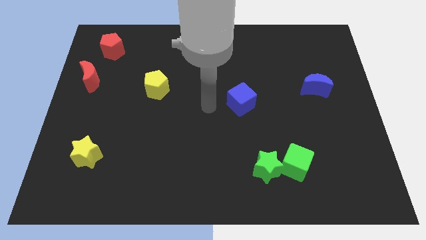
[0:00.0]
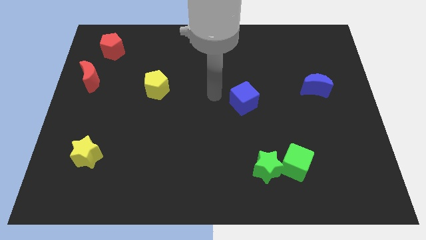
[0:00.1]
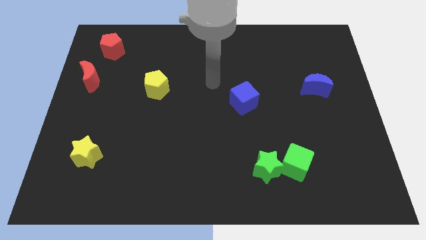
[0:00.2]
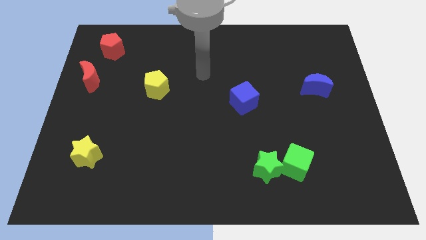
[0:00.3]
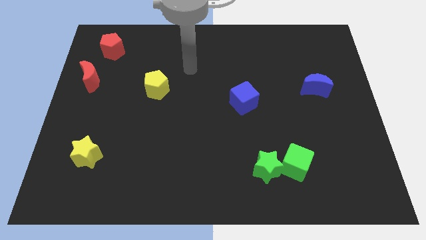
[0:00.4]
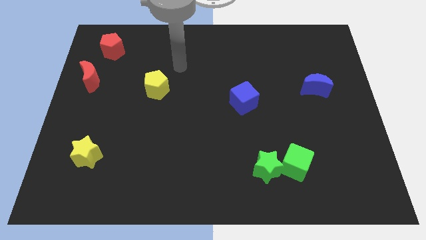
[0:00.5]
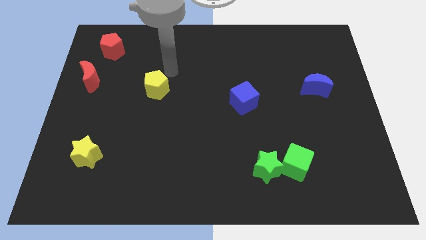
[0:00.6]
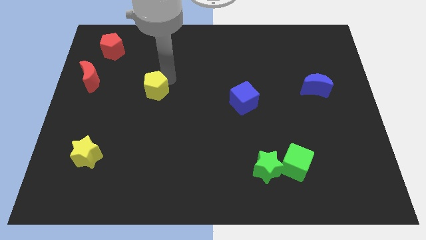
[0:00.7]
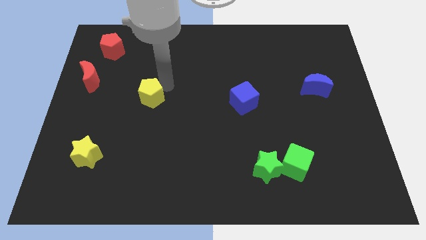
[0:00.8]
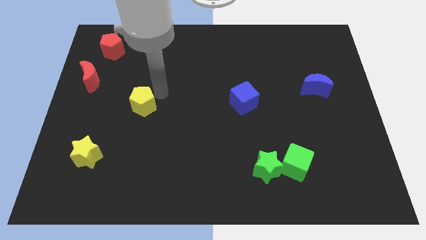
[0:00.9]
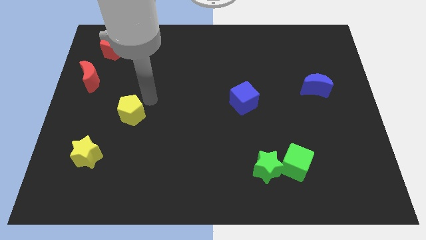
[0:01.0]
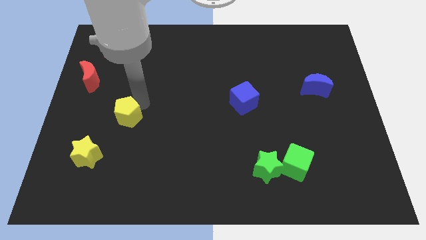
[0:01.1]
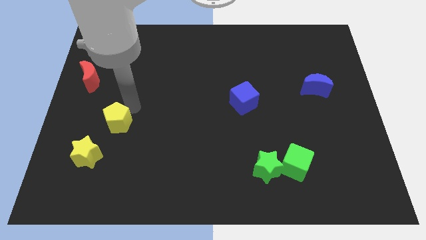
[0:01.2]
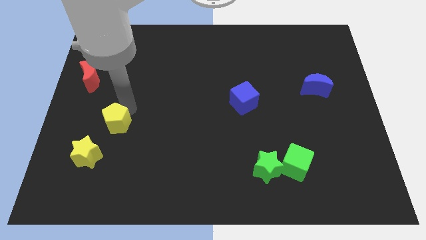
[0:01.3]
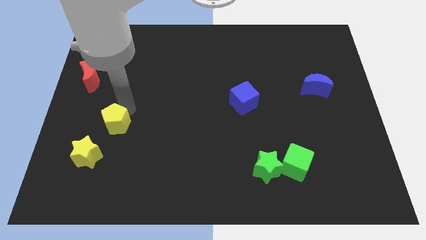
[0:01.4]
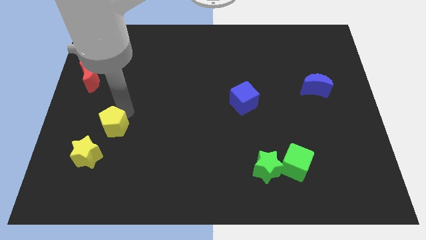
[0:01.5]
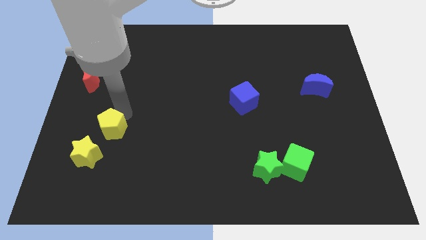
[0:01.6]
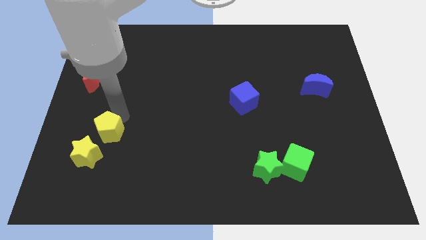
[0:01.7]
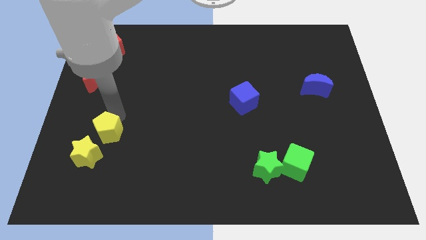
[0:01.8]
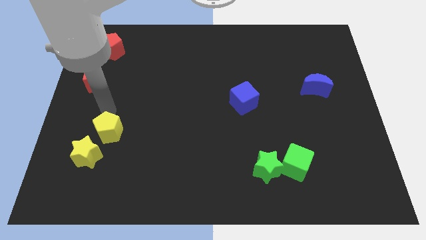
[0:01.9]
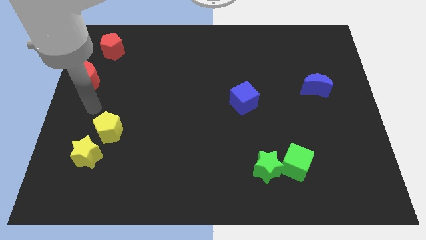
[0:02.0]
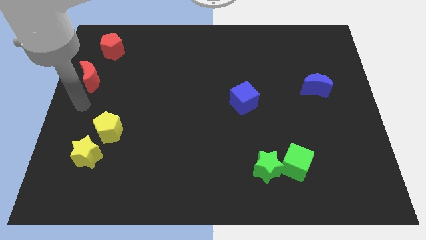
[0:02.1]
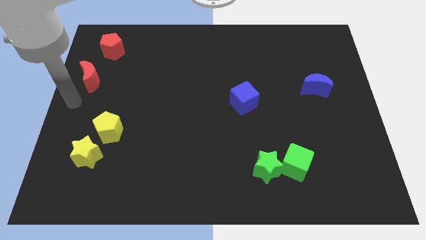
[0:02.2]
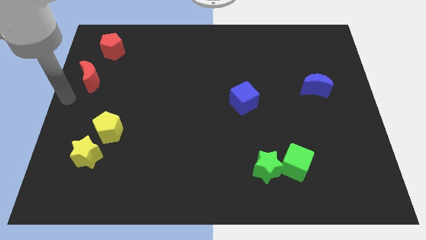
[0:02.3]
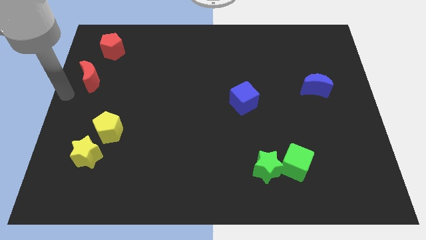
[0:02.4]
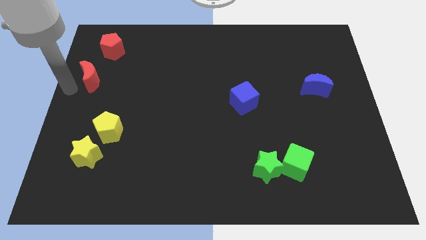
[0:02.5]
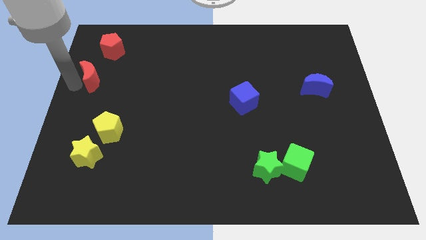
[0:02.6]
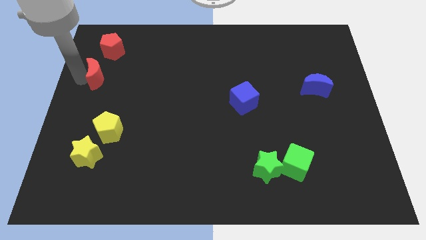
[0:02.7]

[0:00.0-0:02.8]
make a pair of yellow blocks at the bottom left of the table

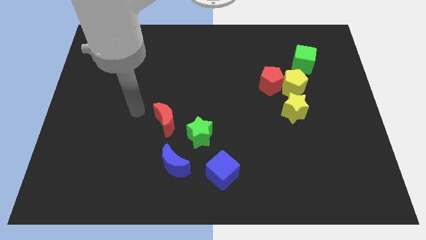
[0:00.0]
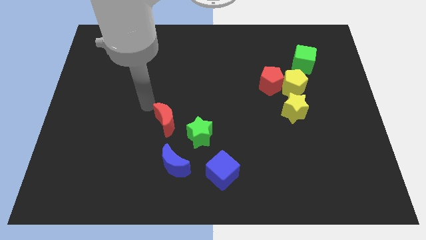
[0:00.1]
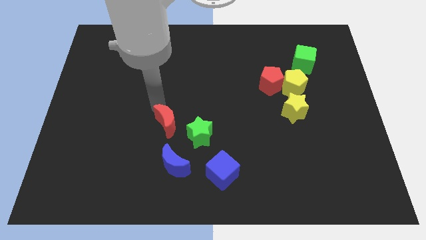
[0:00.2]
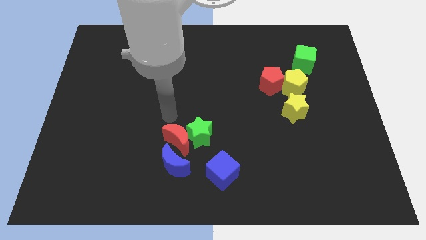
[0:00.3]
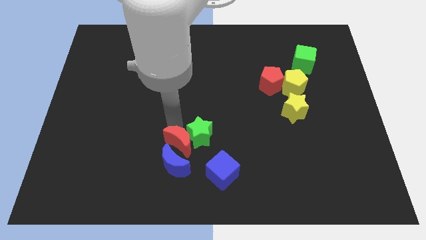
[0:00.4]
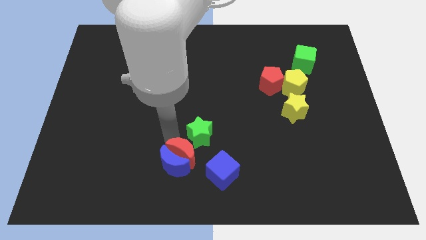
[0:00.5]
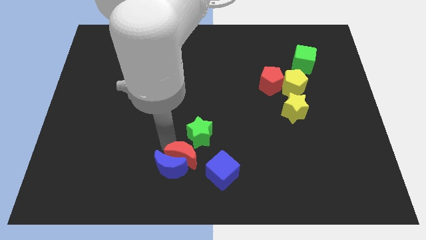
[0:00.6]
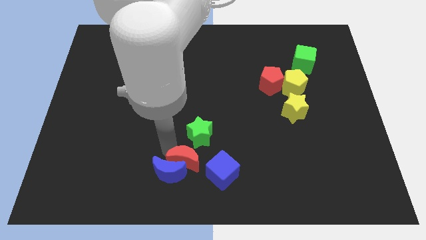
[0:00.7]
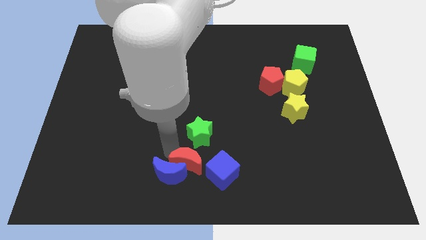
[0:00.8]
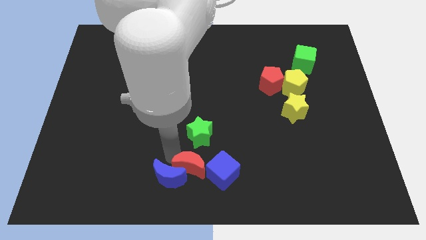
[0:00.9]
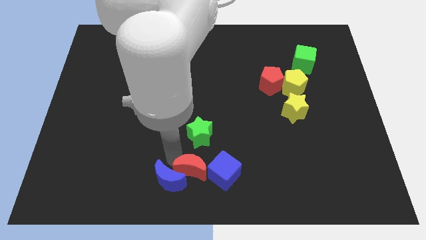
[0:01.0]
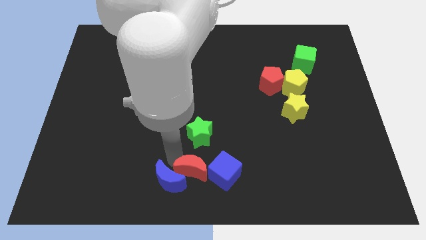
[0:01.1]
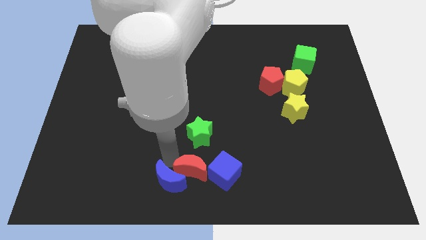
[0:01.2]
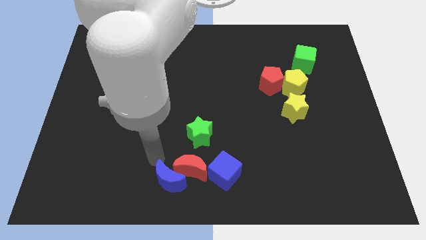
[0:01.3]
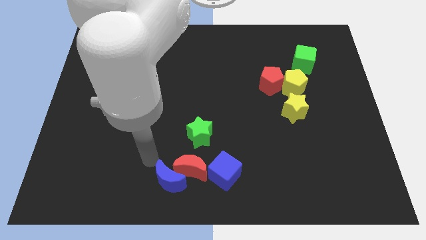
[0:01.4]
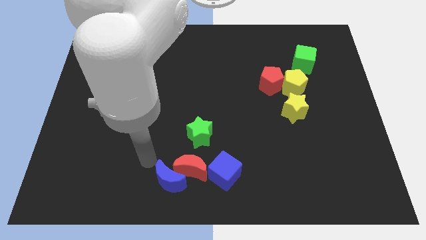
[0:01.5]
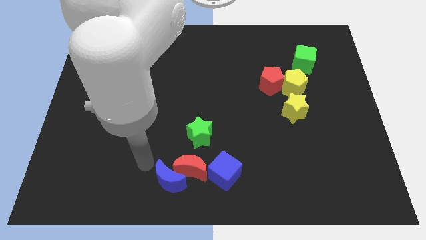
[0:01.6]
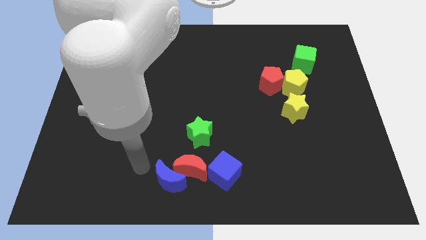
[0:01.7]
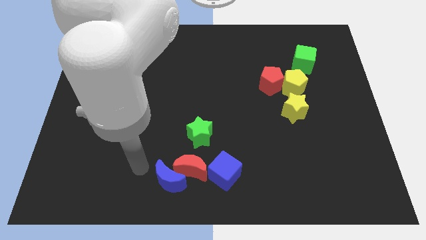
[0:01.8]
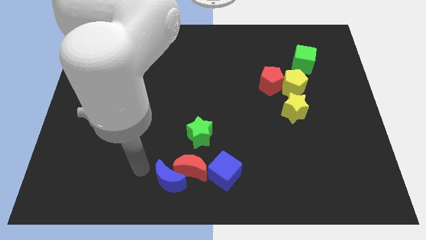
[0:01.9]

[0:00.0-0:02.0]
place the red crescent right side of the blue crescent

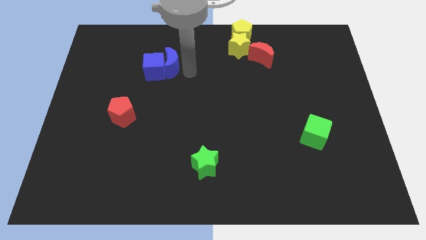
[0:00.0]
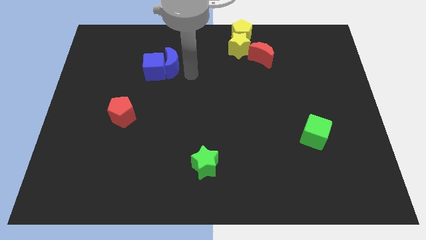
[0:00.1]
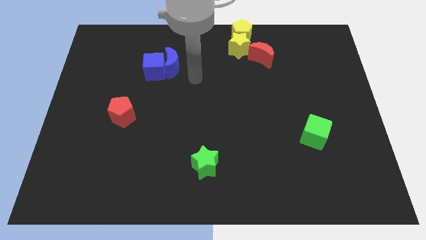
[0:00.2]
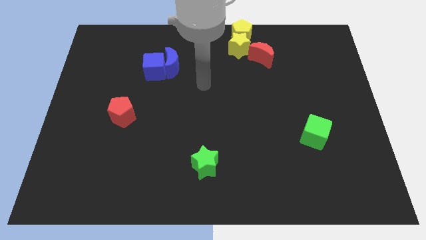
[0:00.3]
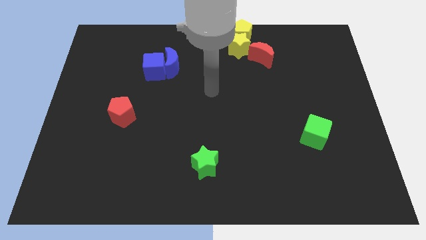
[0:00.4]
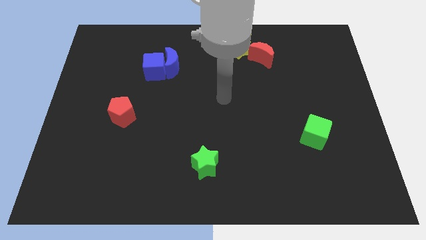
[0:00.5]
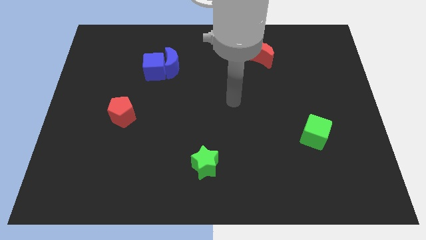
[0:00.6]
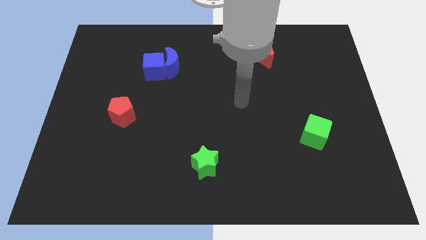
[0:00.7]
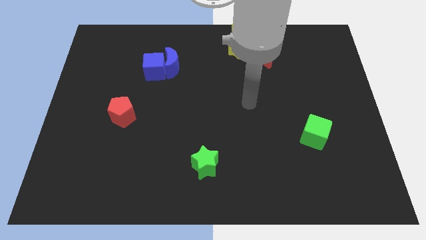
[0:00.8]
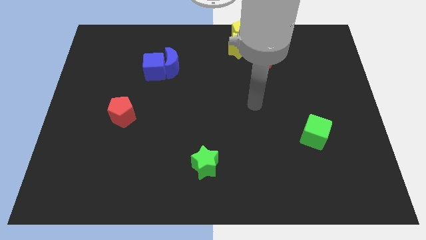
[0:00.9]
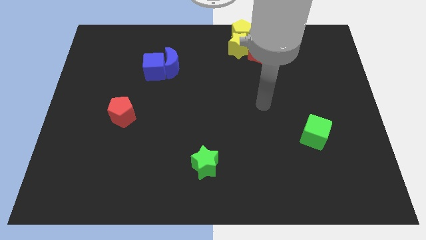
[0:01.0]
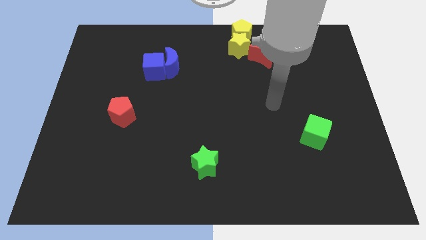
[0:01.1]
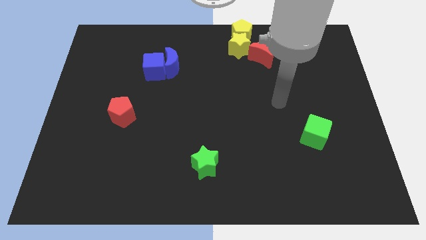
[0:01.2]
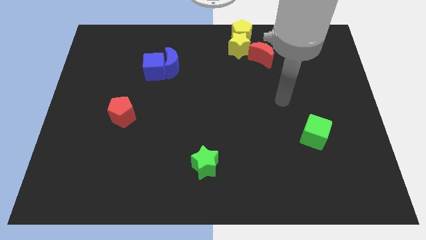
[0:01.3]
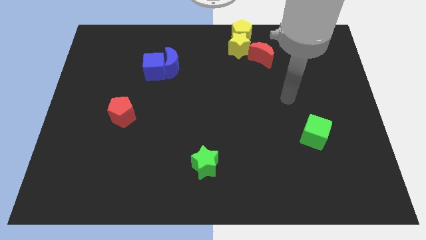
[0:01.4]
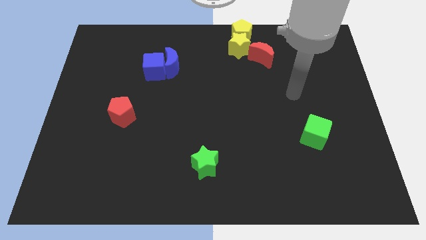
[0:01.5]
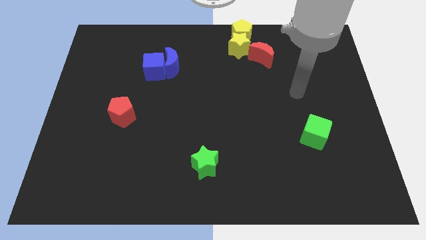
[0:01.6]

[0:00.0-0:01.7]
move yourself away from the blue semi circle

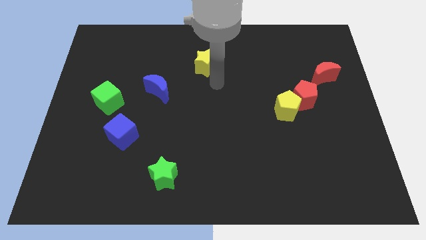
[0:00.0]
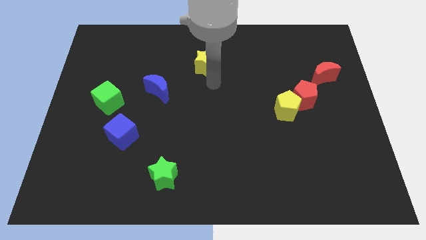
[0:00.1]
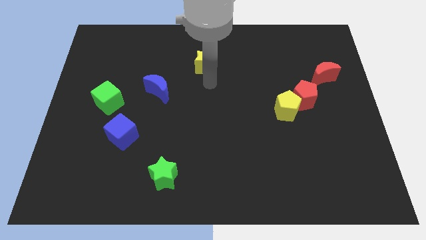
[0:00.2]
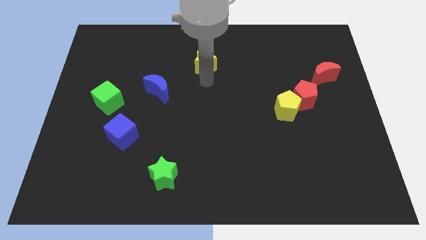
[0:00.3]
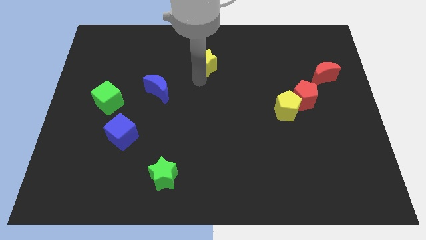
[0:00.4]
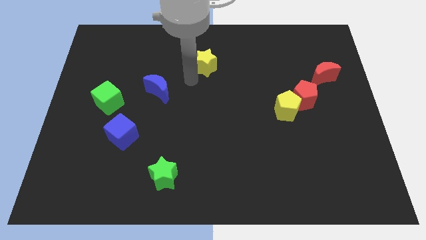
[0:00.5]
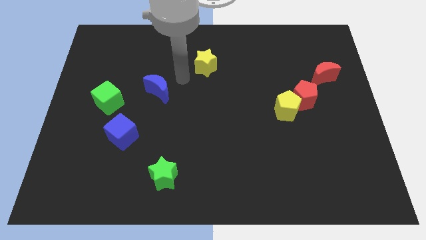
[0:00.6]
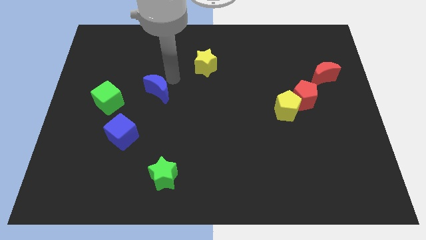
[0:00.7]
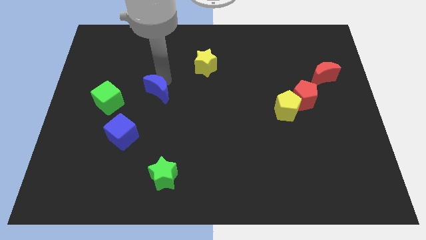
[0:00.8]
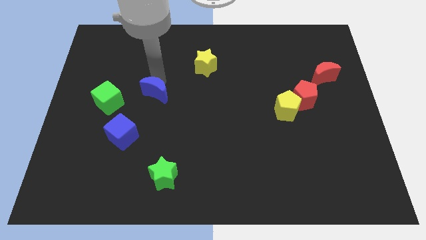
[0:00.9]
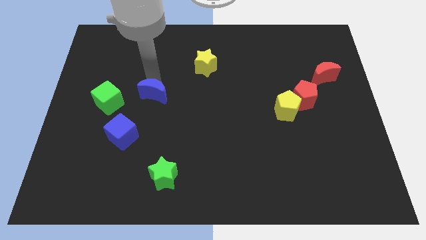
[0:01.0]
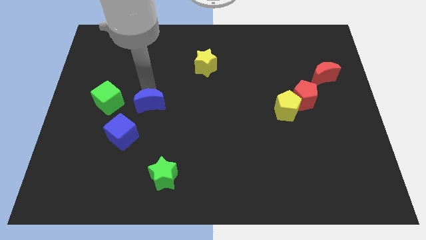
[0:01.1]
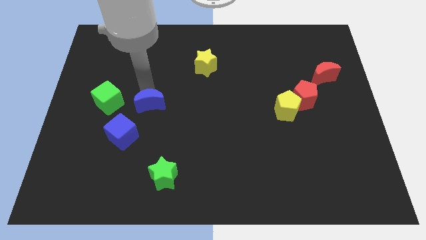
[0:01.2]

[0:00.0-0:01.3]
place blue moon to the green cube

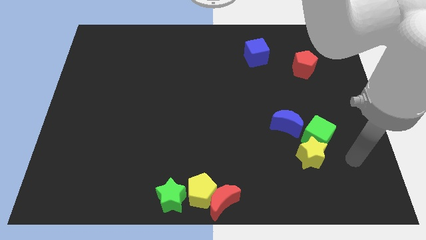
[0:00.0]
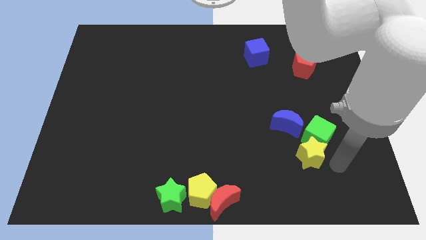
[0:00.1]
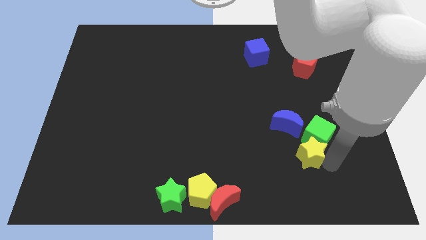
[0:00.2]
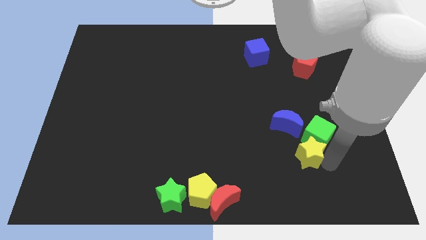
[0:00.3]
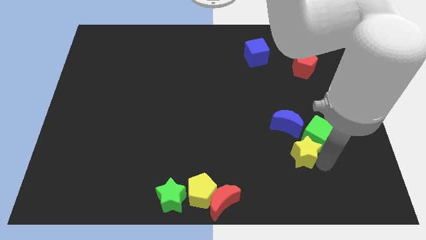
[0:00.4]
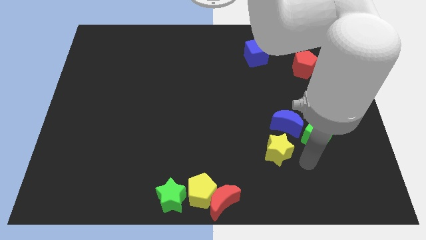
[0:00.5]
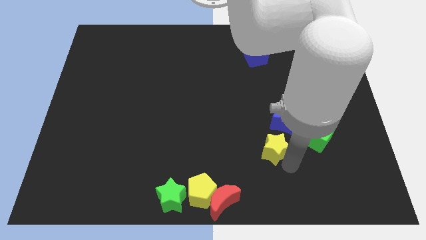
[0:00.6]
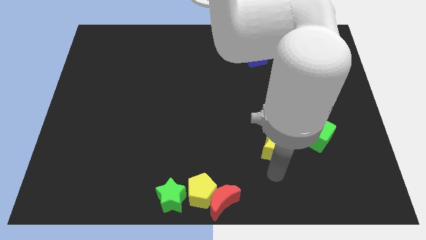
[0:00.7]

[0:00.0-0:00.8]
separate the yellow star from the green cube

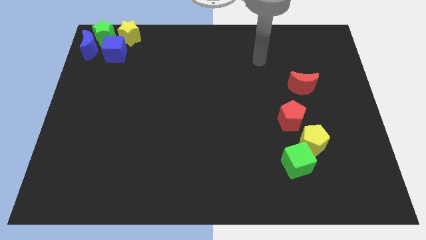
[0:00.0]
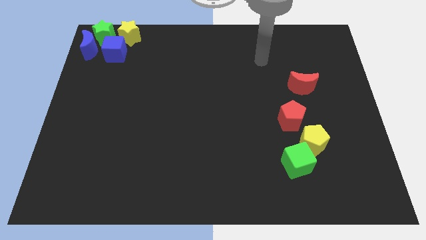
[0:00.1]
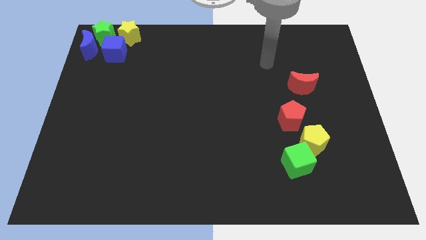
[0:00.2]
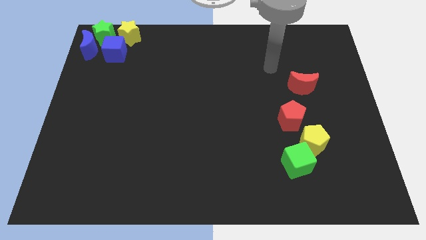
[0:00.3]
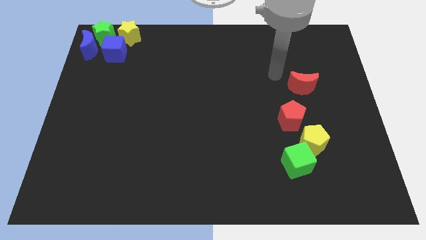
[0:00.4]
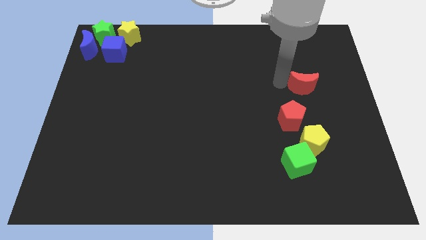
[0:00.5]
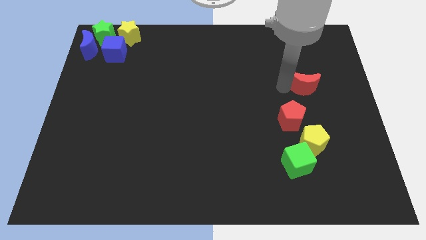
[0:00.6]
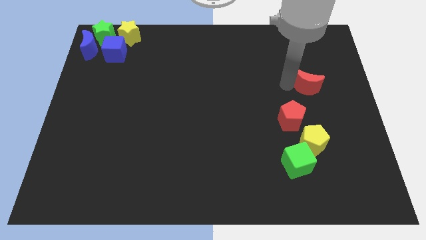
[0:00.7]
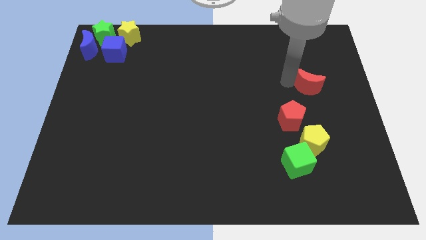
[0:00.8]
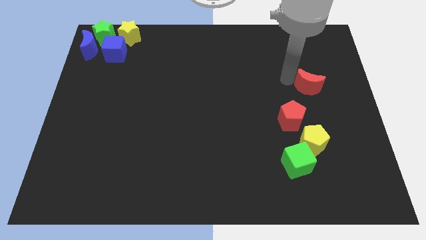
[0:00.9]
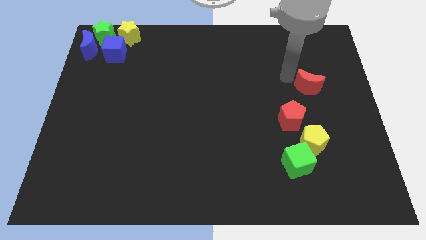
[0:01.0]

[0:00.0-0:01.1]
slightly push red moon to its right
